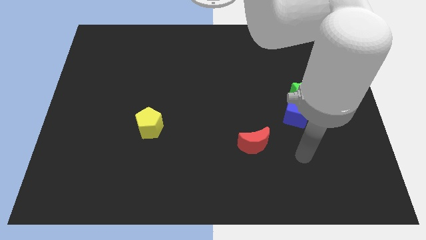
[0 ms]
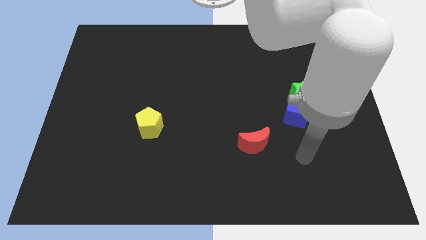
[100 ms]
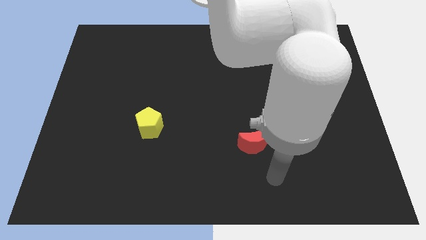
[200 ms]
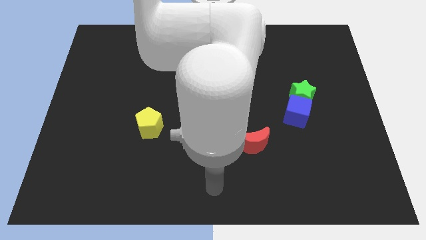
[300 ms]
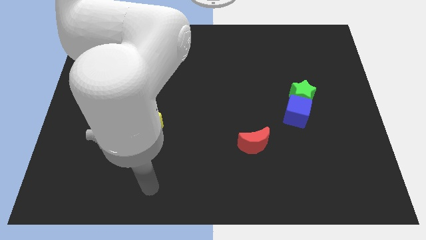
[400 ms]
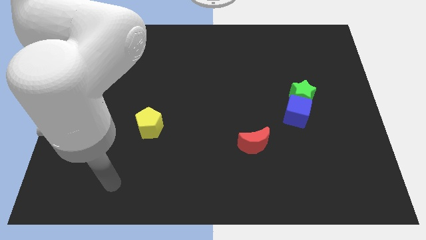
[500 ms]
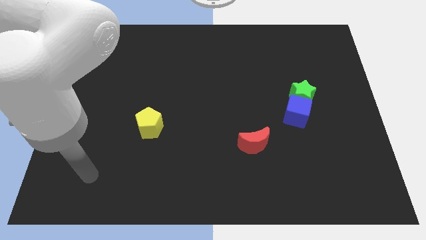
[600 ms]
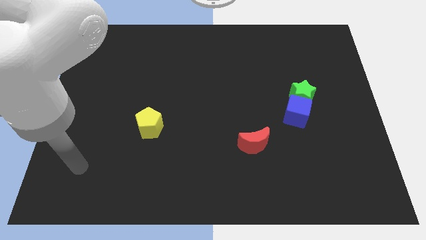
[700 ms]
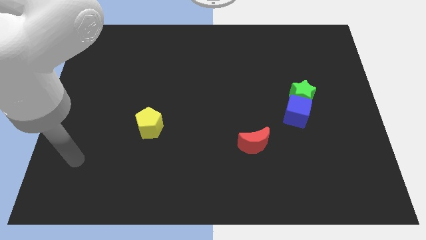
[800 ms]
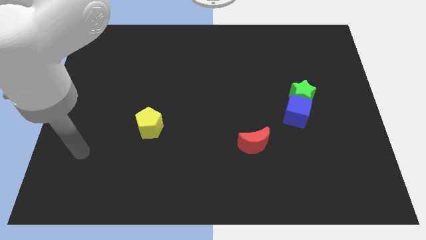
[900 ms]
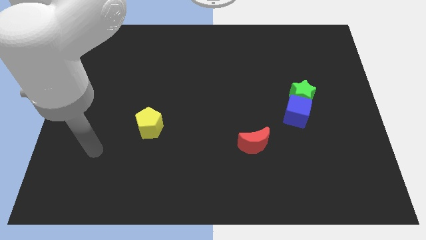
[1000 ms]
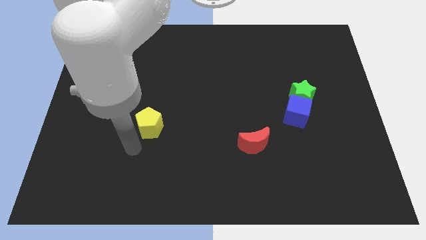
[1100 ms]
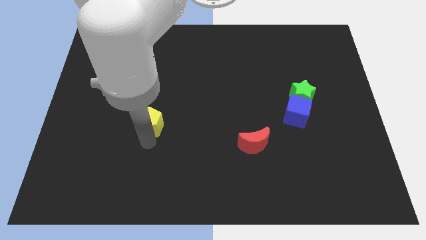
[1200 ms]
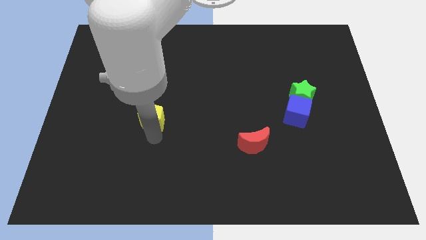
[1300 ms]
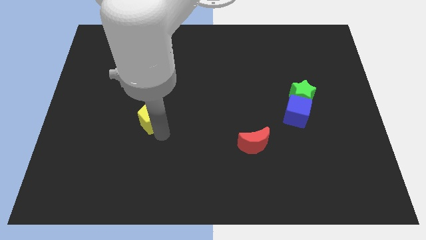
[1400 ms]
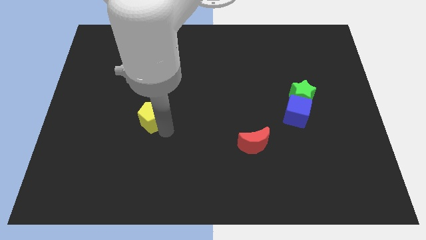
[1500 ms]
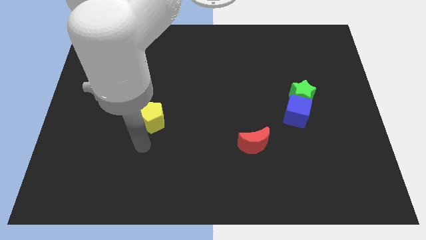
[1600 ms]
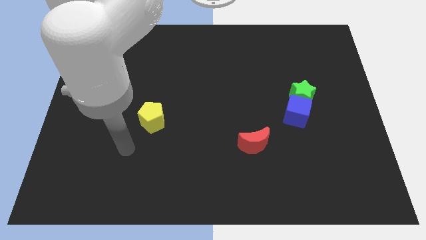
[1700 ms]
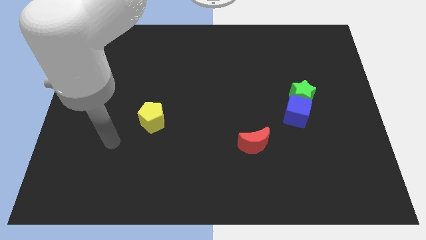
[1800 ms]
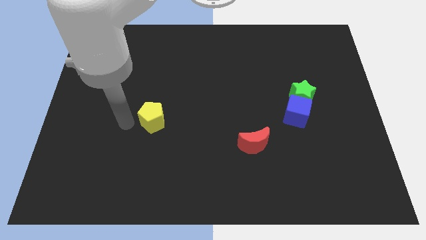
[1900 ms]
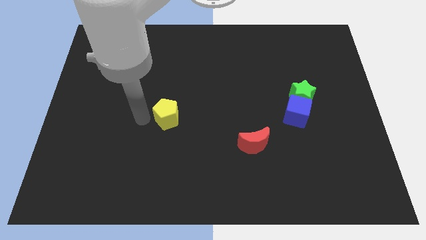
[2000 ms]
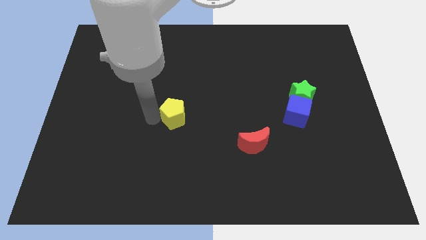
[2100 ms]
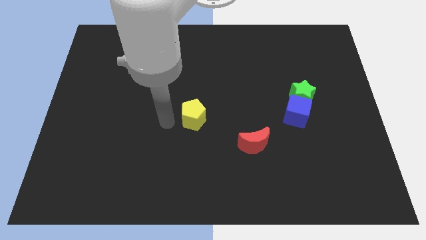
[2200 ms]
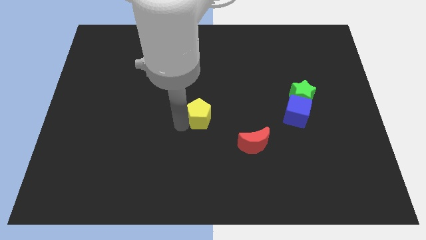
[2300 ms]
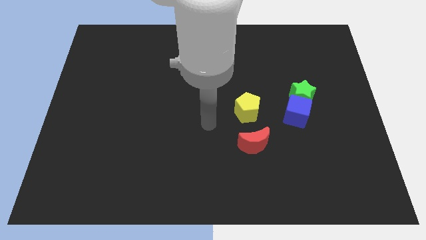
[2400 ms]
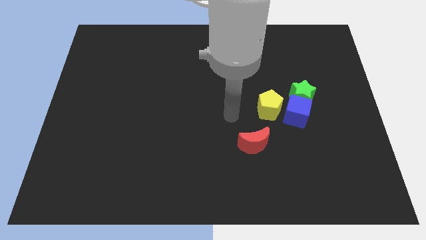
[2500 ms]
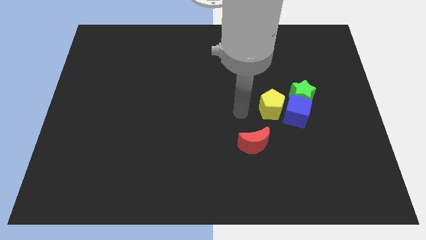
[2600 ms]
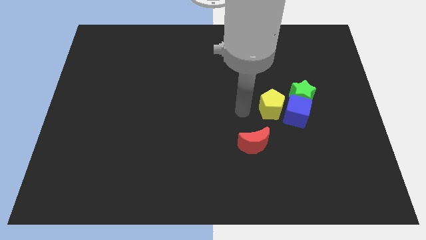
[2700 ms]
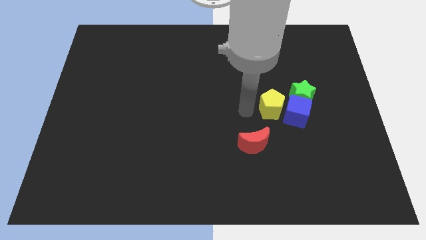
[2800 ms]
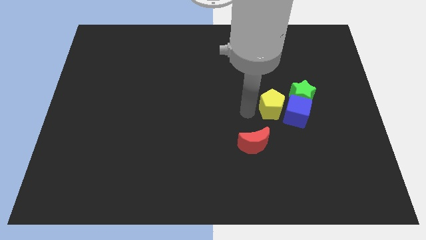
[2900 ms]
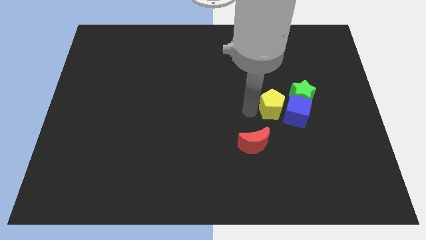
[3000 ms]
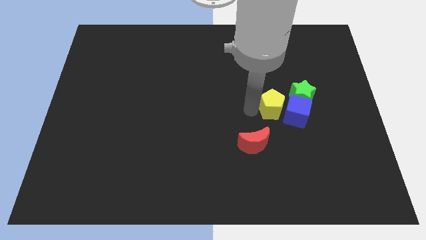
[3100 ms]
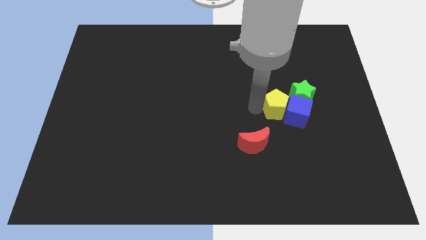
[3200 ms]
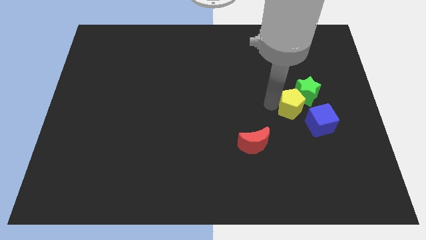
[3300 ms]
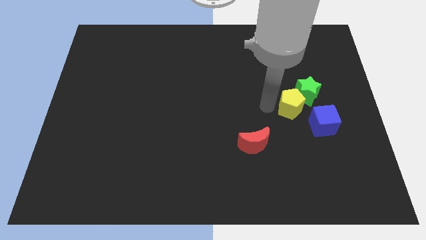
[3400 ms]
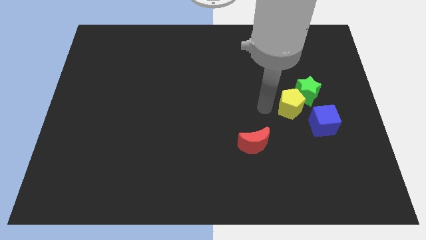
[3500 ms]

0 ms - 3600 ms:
move the yellow block next to the star

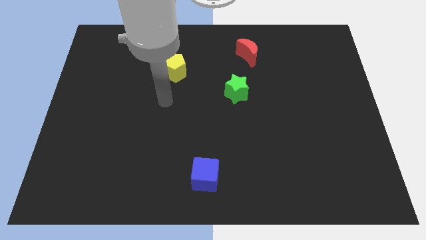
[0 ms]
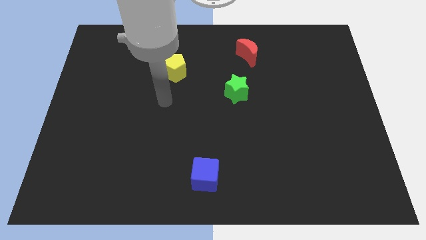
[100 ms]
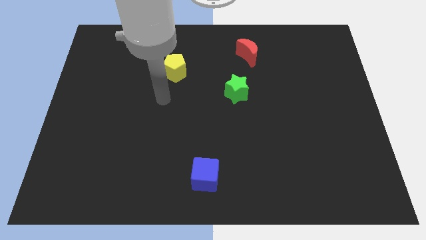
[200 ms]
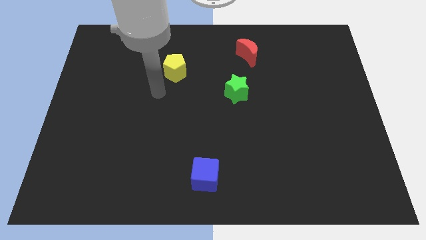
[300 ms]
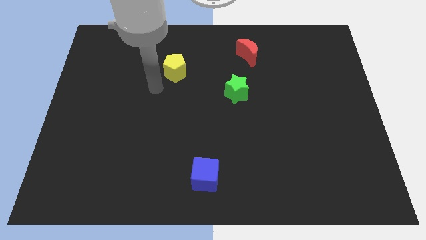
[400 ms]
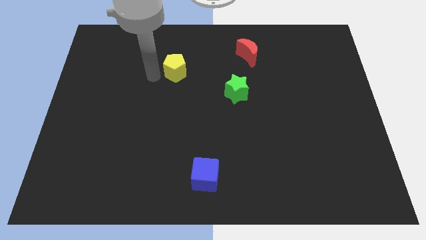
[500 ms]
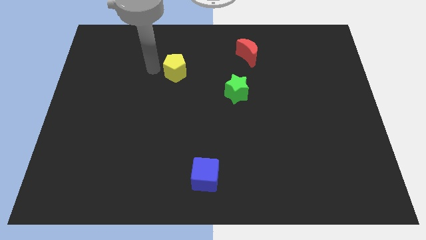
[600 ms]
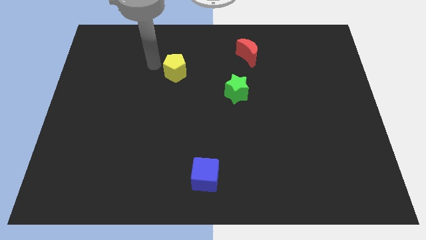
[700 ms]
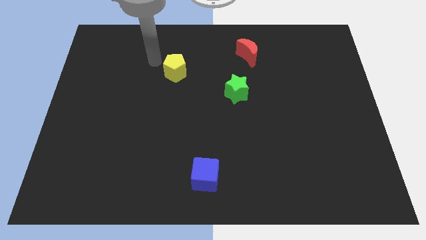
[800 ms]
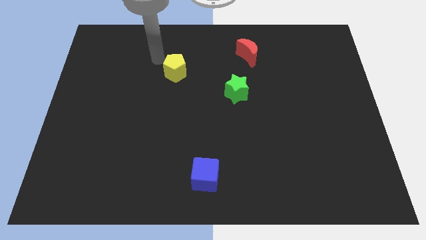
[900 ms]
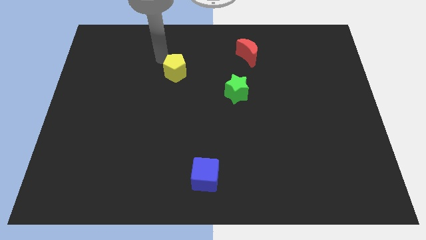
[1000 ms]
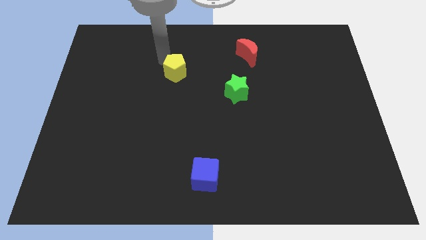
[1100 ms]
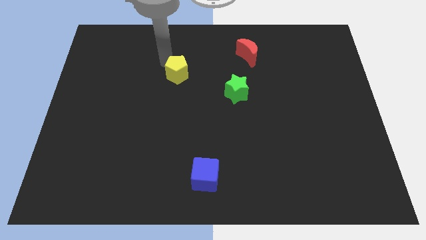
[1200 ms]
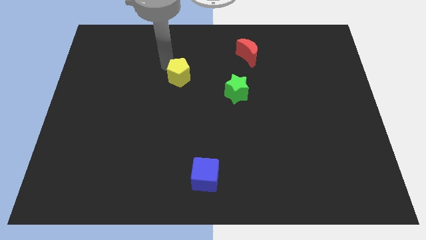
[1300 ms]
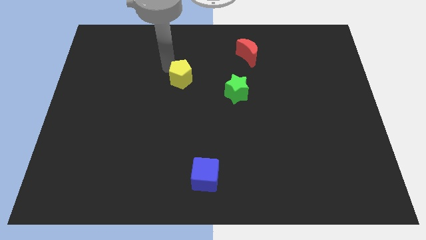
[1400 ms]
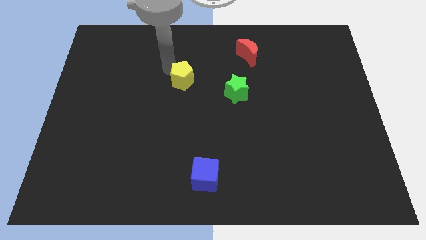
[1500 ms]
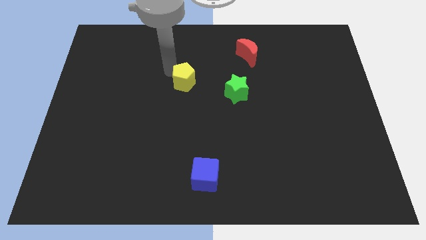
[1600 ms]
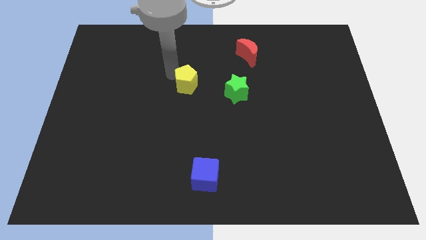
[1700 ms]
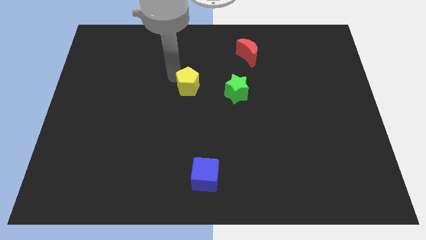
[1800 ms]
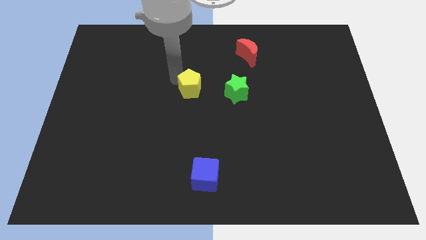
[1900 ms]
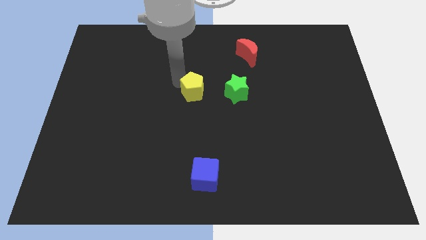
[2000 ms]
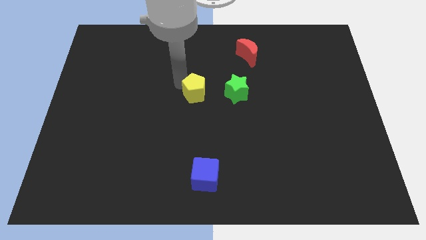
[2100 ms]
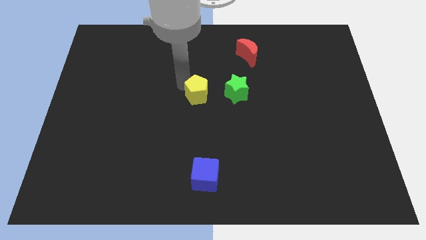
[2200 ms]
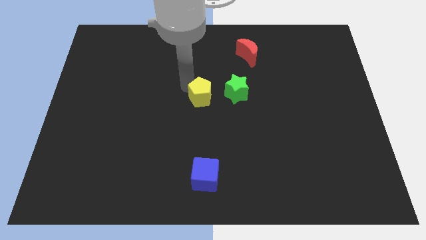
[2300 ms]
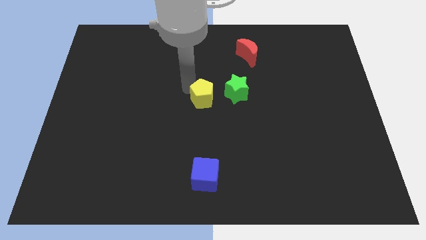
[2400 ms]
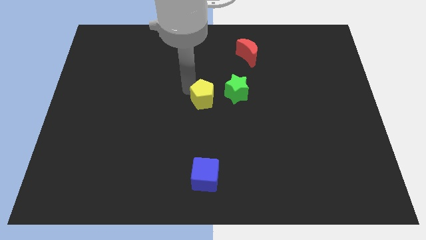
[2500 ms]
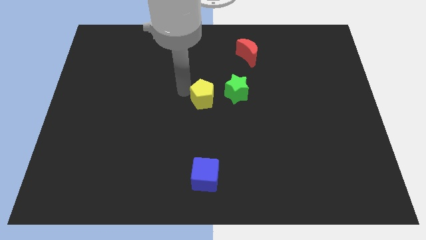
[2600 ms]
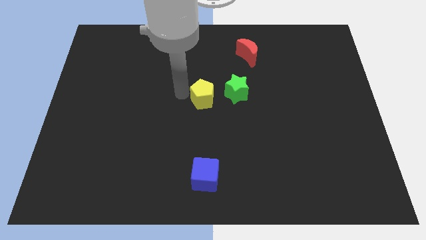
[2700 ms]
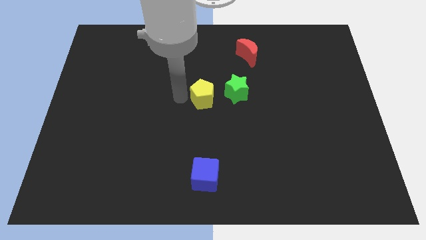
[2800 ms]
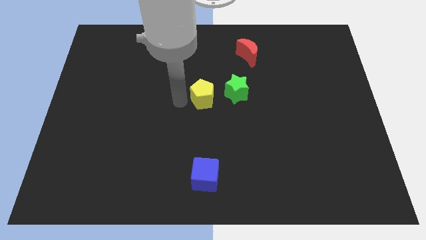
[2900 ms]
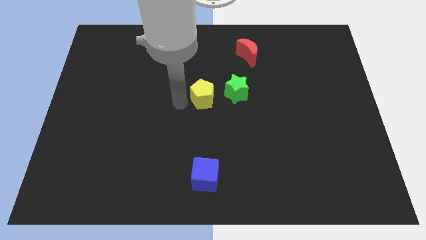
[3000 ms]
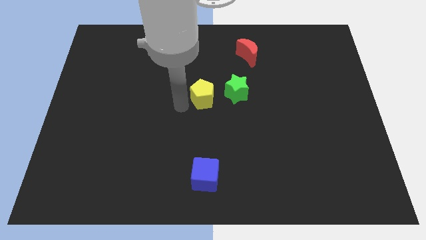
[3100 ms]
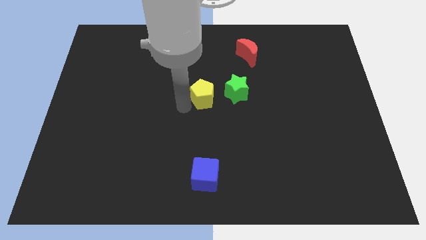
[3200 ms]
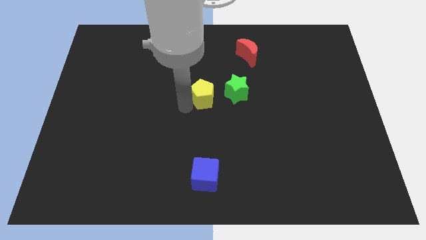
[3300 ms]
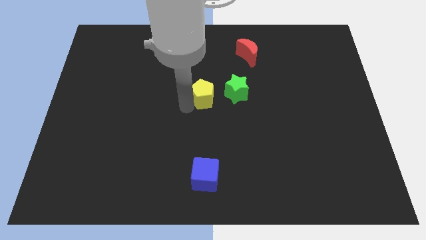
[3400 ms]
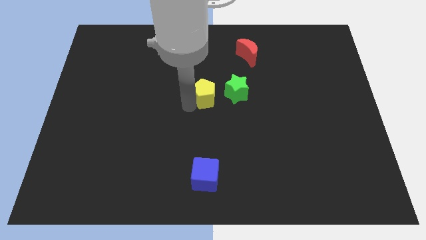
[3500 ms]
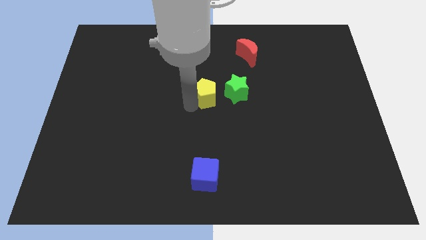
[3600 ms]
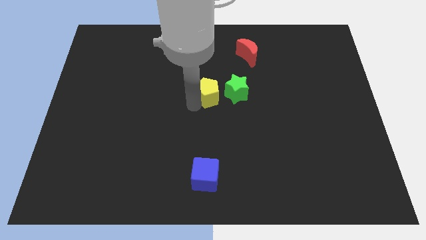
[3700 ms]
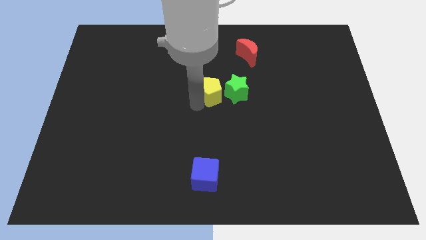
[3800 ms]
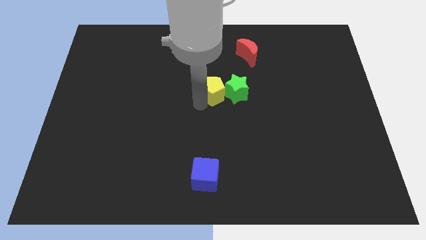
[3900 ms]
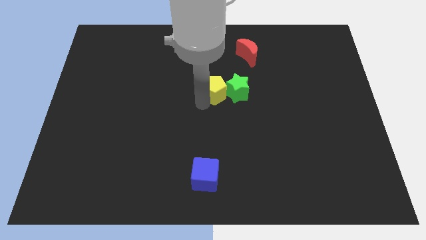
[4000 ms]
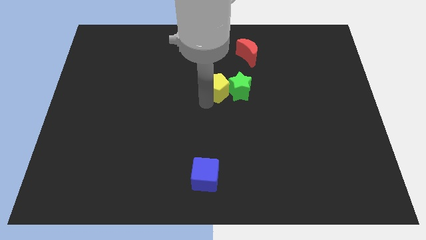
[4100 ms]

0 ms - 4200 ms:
move the yellow block towards the green block

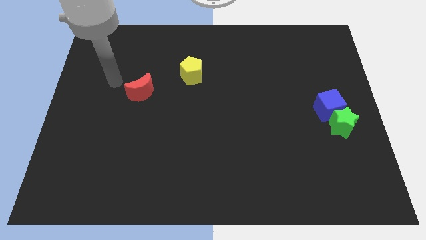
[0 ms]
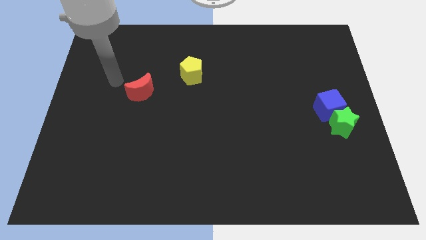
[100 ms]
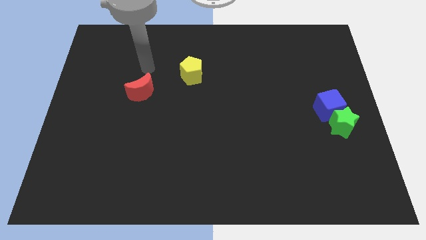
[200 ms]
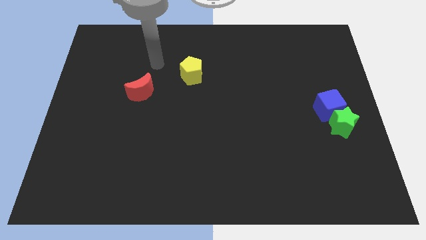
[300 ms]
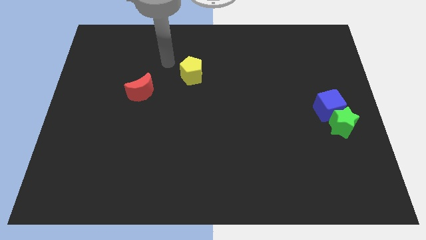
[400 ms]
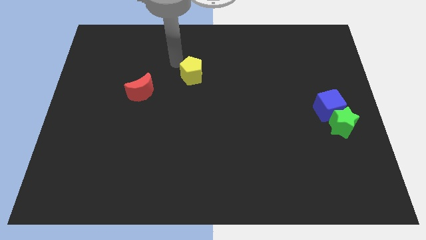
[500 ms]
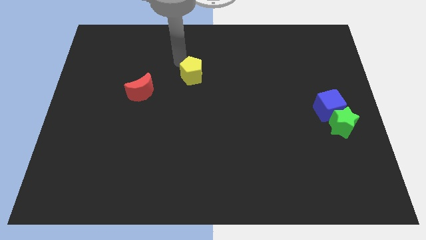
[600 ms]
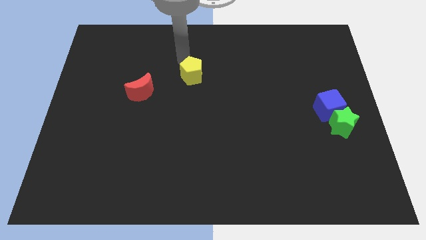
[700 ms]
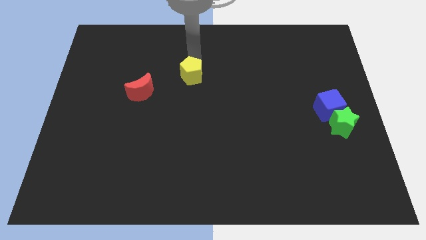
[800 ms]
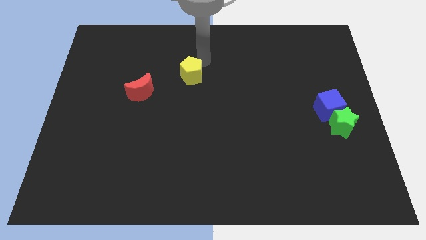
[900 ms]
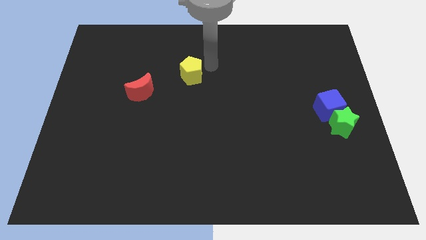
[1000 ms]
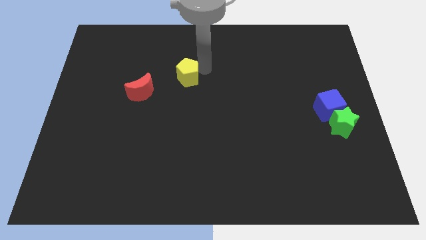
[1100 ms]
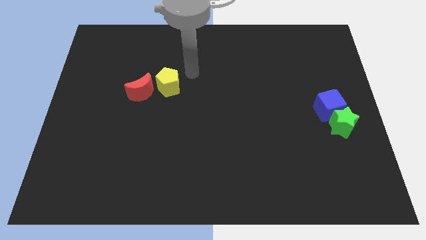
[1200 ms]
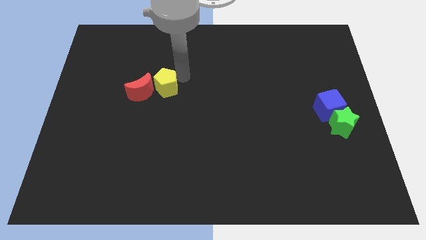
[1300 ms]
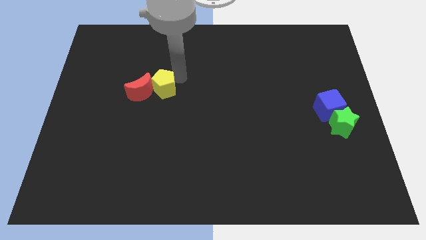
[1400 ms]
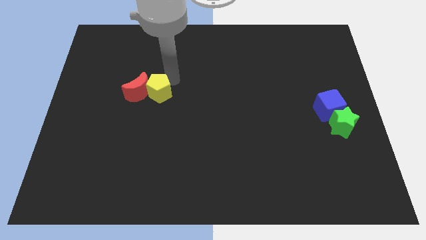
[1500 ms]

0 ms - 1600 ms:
put the pentagon next to the red block
